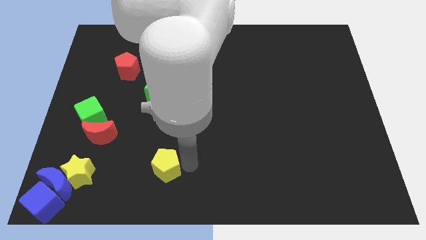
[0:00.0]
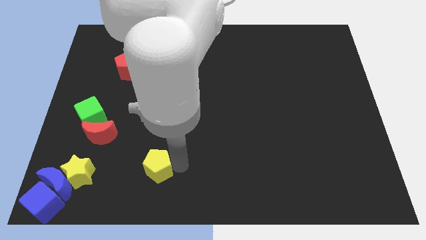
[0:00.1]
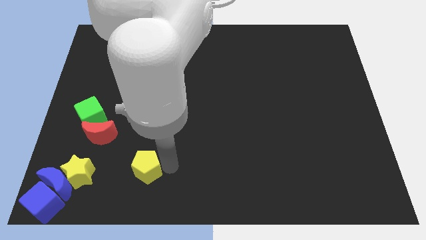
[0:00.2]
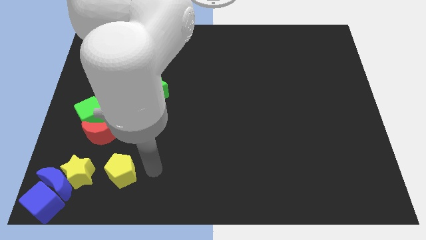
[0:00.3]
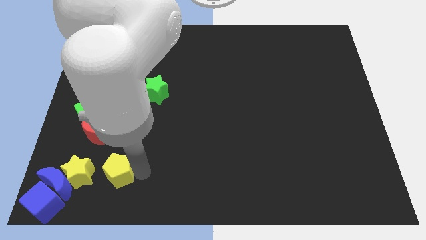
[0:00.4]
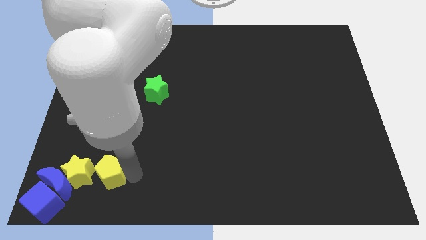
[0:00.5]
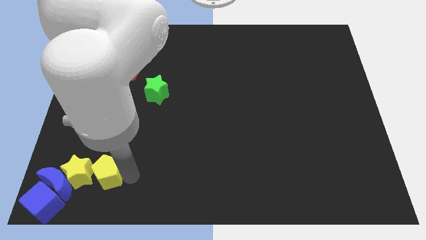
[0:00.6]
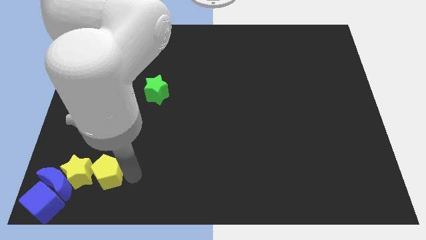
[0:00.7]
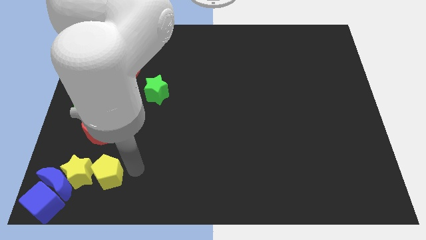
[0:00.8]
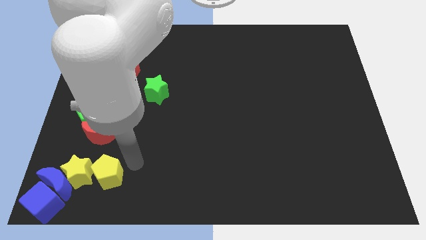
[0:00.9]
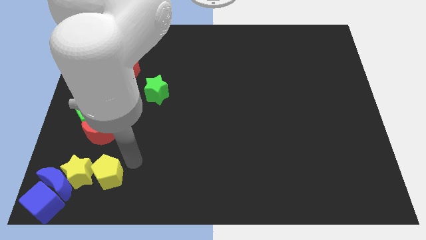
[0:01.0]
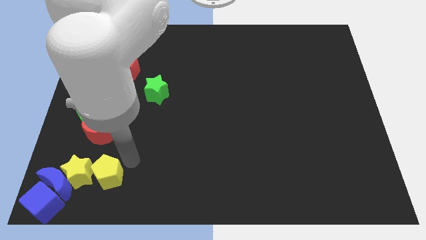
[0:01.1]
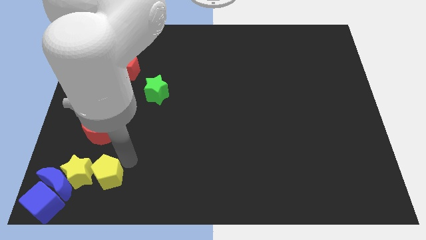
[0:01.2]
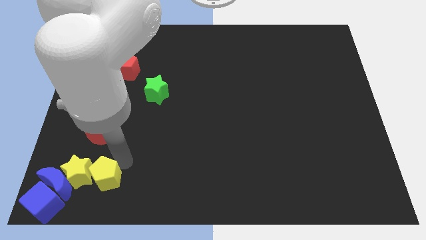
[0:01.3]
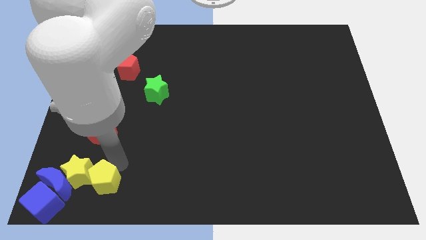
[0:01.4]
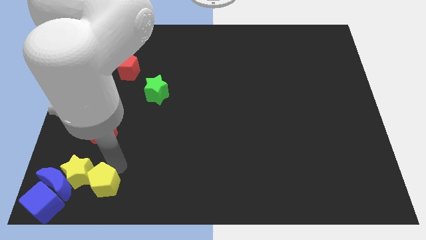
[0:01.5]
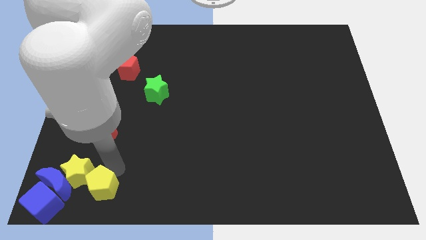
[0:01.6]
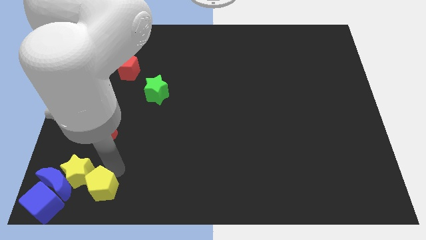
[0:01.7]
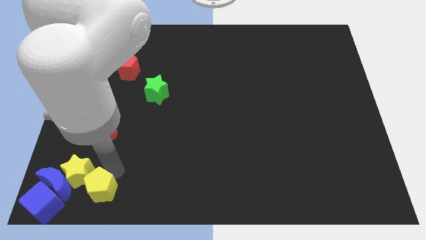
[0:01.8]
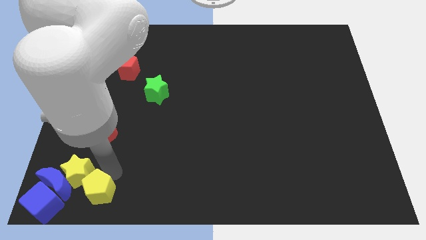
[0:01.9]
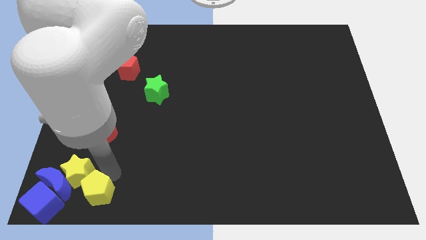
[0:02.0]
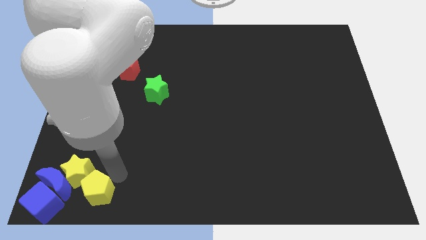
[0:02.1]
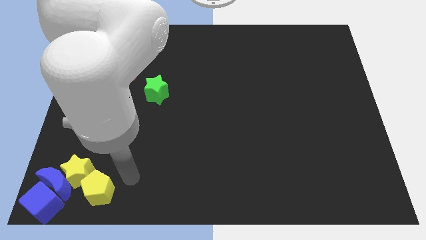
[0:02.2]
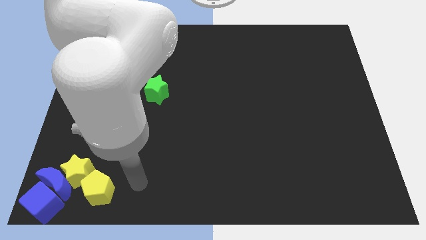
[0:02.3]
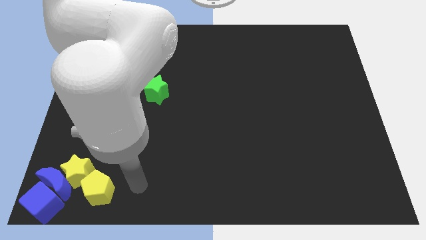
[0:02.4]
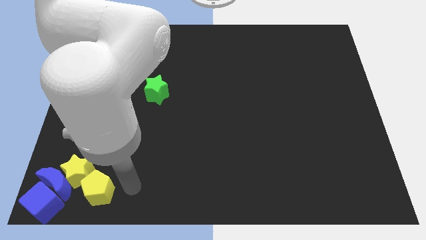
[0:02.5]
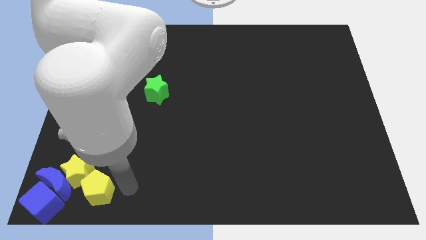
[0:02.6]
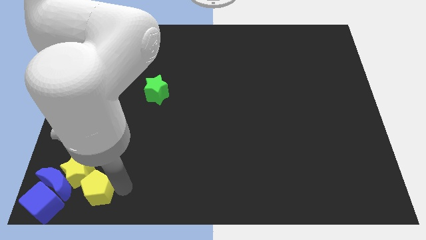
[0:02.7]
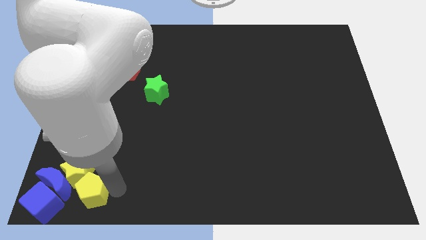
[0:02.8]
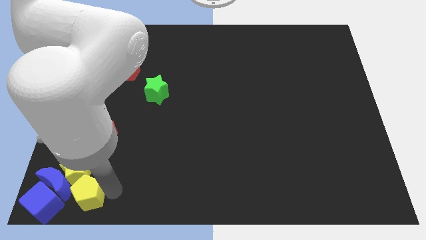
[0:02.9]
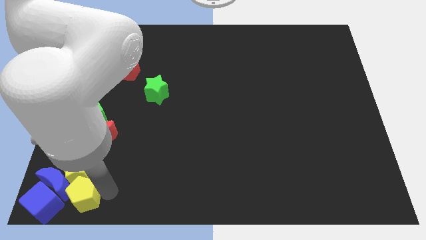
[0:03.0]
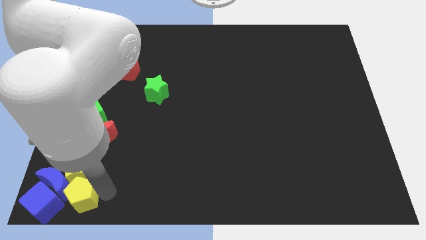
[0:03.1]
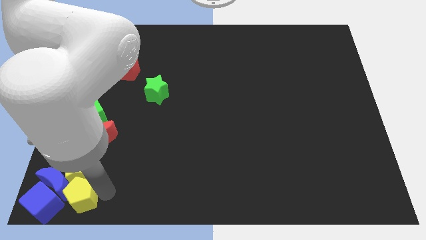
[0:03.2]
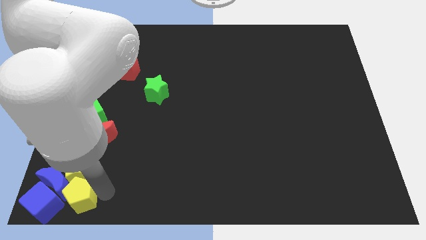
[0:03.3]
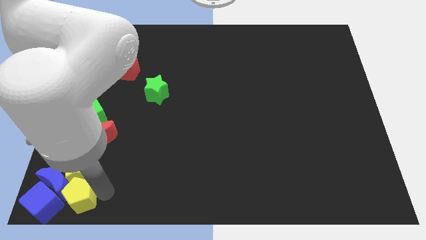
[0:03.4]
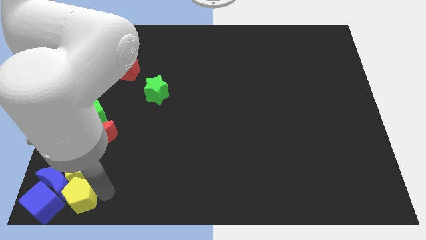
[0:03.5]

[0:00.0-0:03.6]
move the yellow pentagon to the bottom of the yellow star

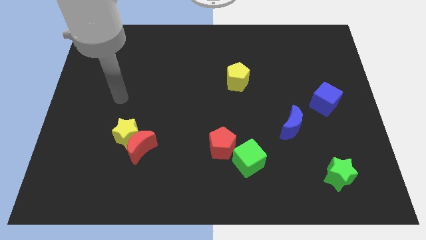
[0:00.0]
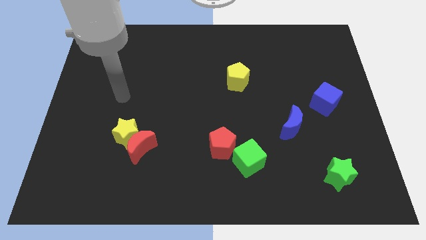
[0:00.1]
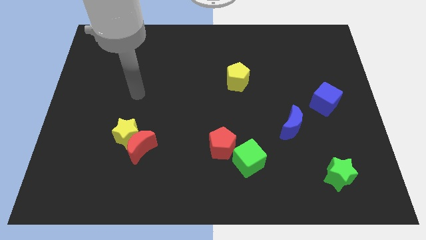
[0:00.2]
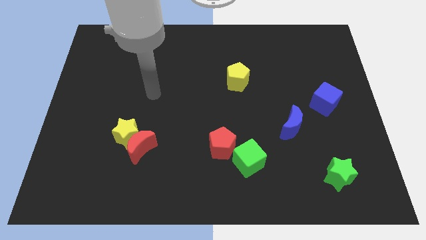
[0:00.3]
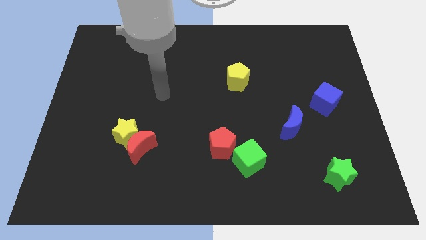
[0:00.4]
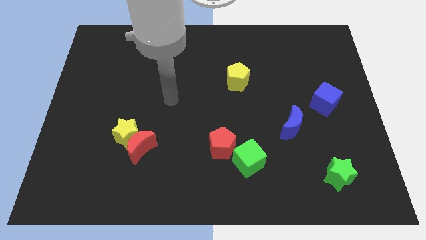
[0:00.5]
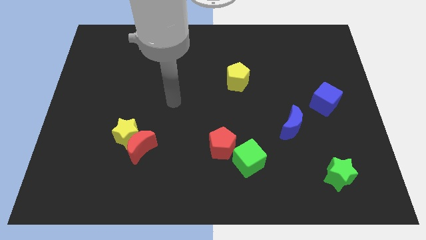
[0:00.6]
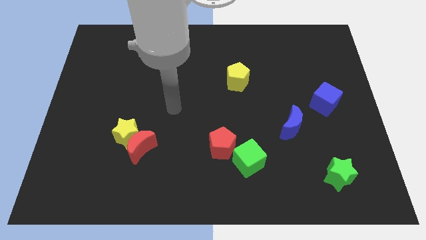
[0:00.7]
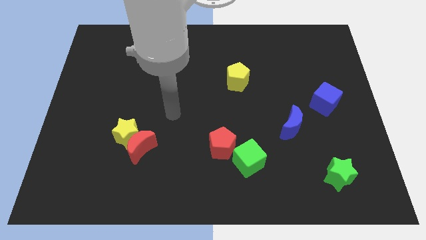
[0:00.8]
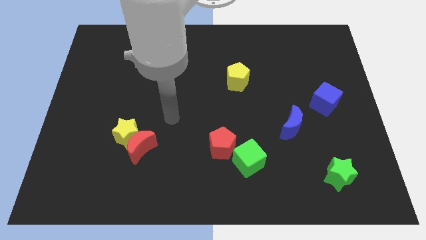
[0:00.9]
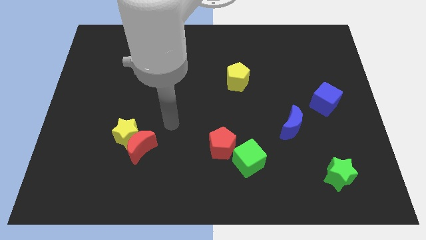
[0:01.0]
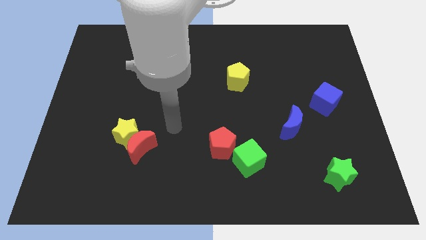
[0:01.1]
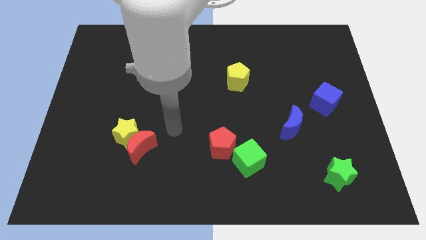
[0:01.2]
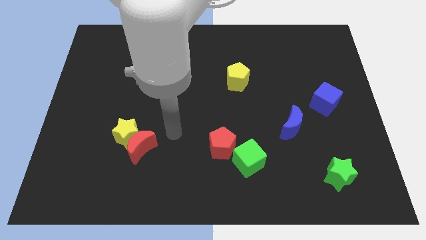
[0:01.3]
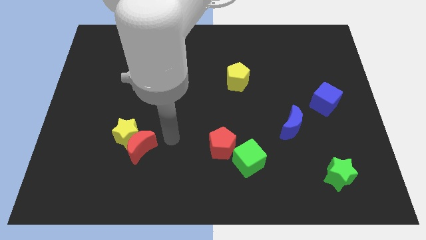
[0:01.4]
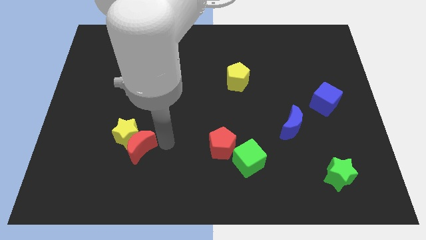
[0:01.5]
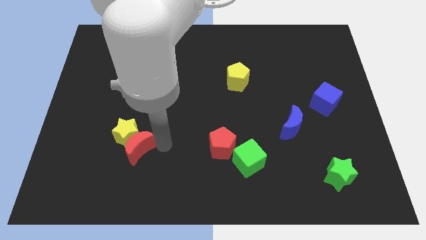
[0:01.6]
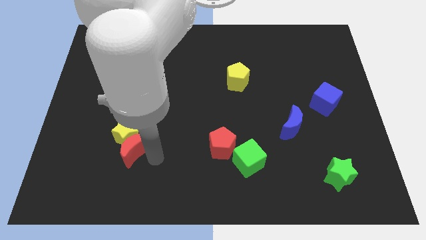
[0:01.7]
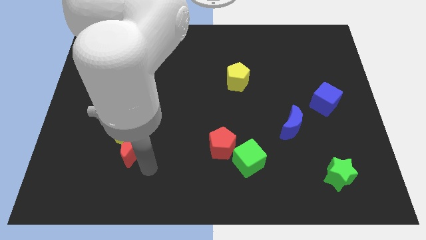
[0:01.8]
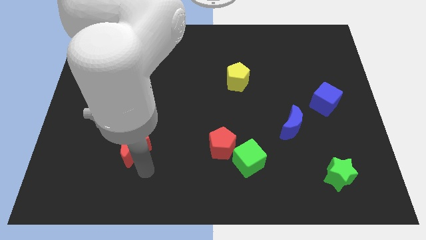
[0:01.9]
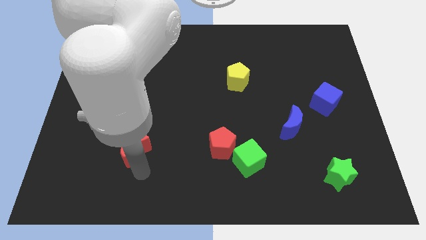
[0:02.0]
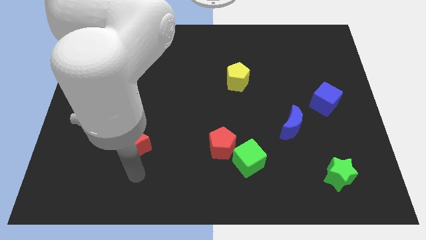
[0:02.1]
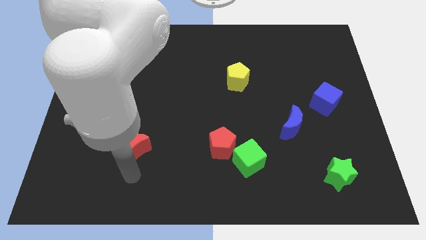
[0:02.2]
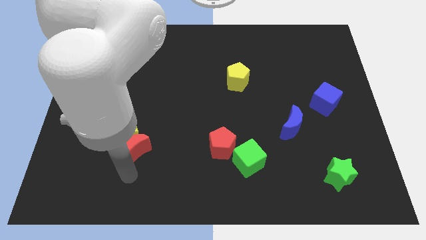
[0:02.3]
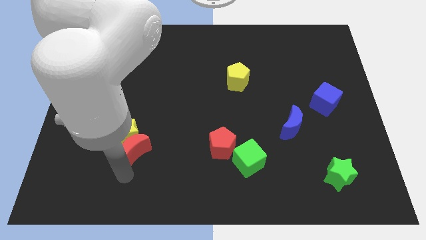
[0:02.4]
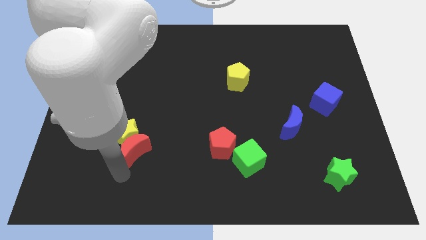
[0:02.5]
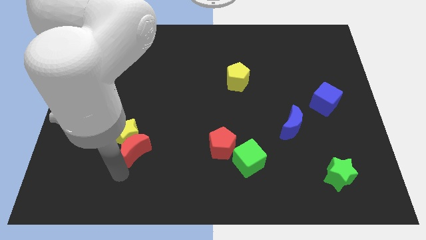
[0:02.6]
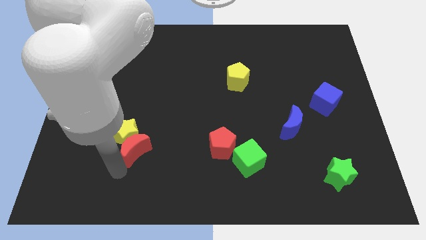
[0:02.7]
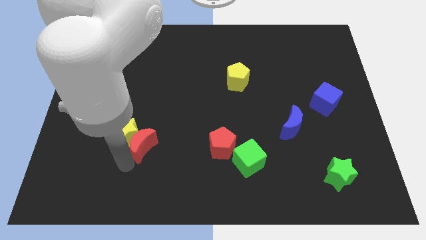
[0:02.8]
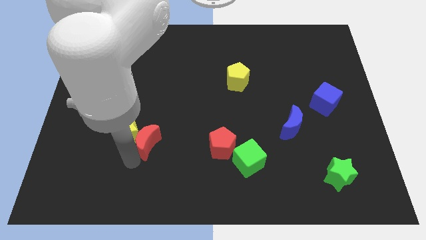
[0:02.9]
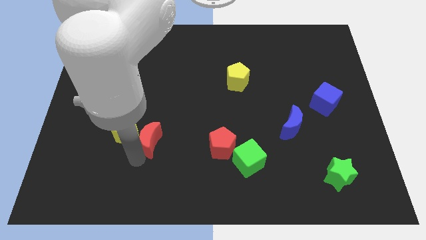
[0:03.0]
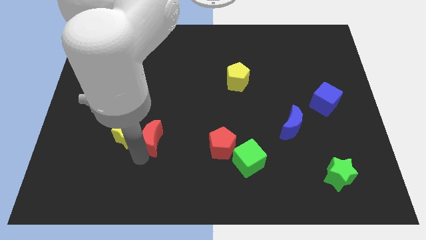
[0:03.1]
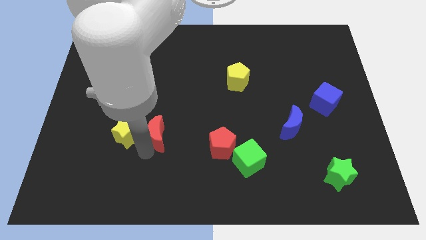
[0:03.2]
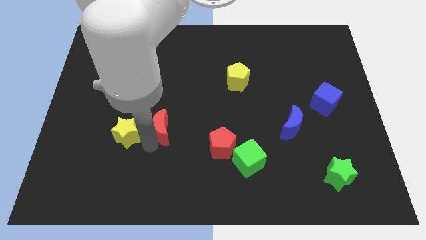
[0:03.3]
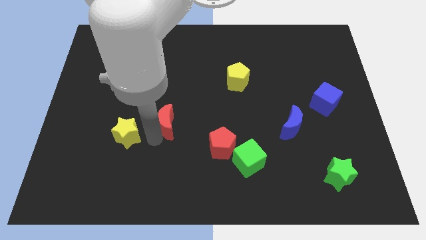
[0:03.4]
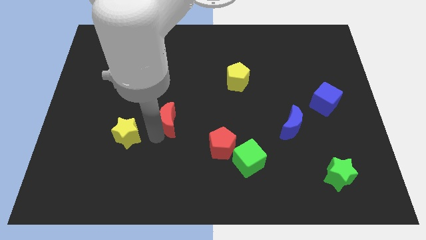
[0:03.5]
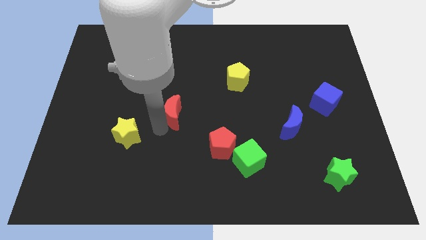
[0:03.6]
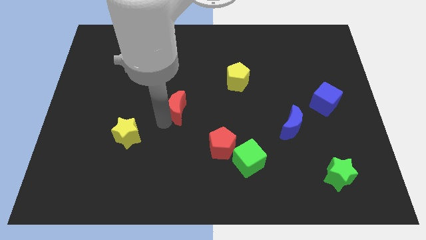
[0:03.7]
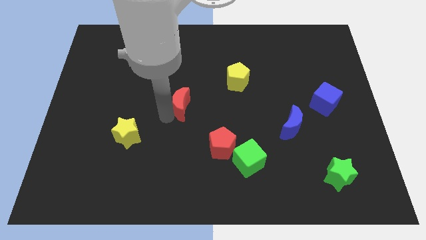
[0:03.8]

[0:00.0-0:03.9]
separate the red moon from the yellow star

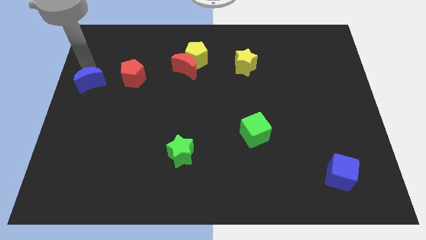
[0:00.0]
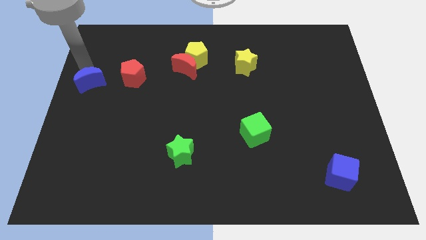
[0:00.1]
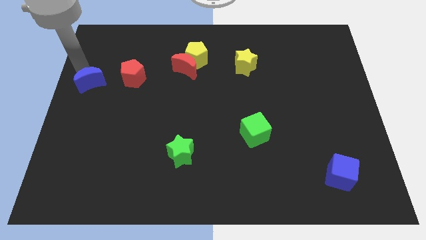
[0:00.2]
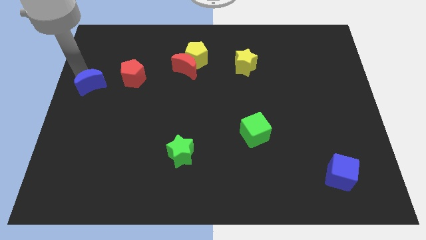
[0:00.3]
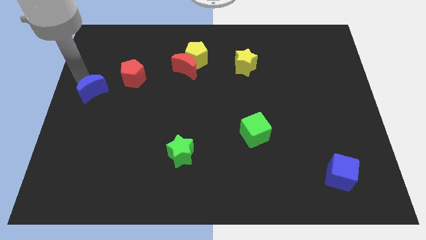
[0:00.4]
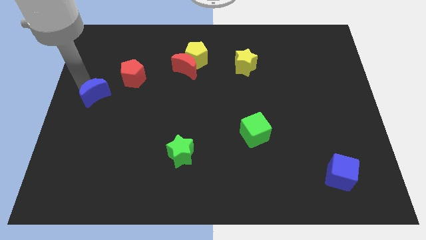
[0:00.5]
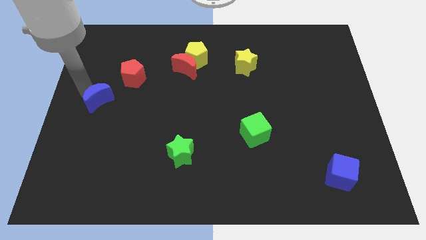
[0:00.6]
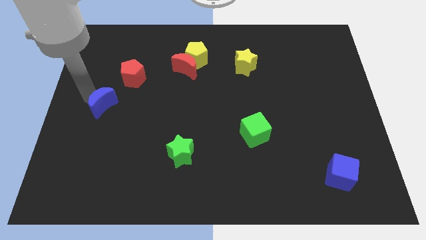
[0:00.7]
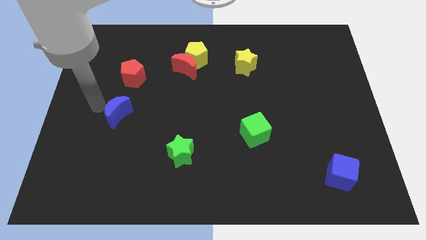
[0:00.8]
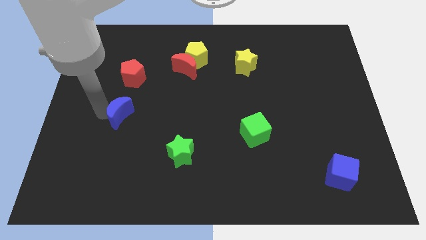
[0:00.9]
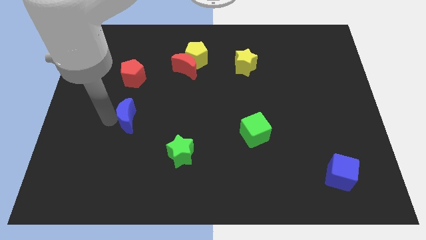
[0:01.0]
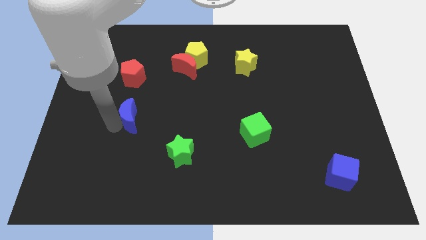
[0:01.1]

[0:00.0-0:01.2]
place blue moon to the bottom of red pentagon

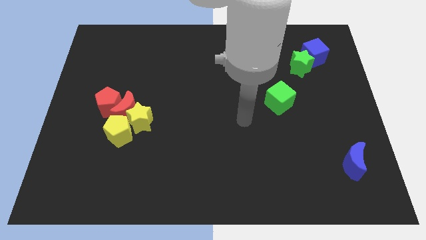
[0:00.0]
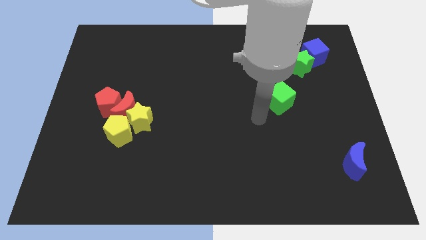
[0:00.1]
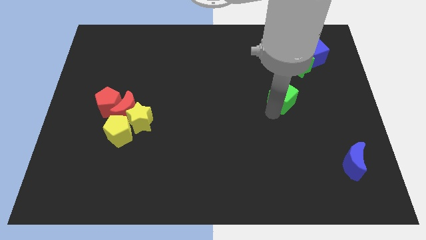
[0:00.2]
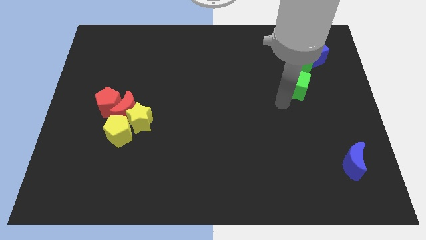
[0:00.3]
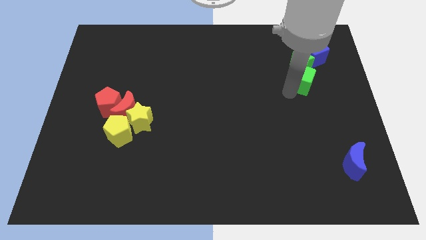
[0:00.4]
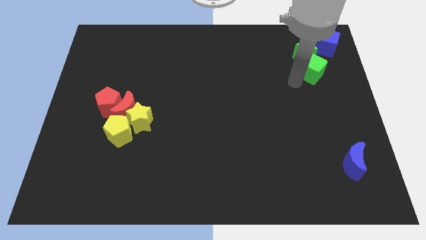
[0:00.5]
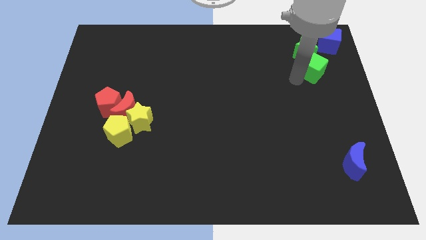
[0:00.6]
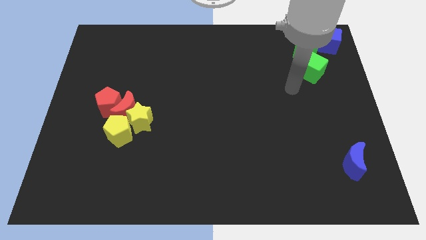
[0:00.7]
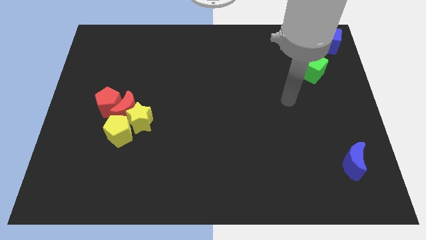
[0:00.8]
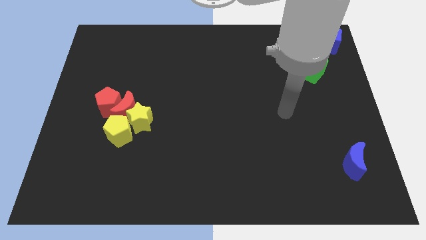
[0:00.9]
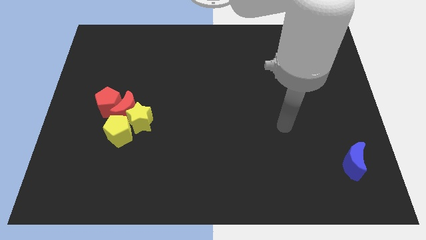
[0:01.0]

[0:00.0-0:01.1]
push the green cube to the bottom of the green star
